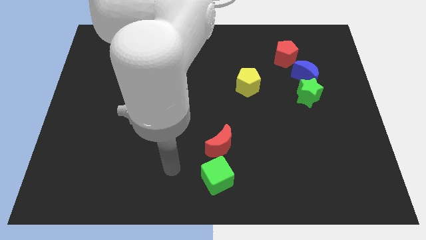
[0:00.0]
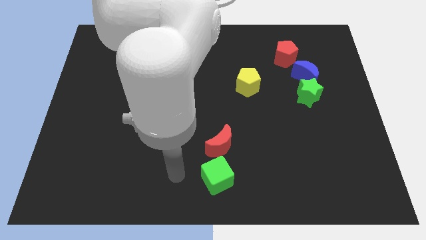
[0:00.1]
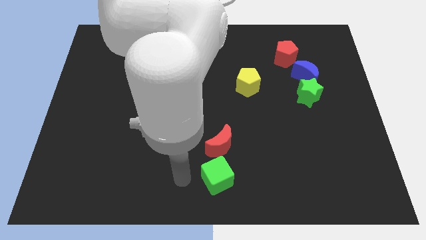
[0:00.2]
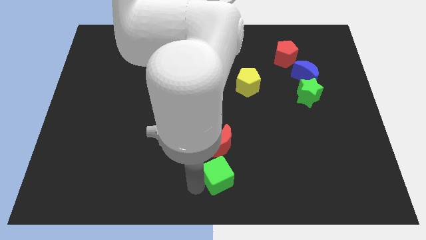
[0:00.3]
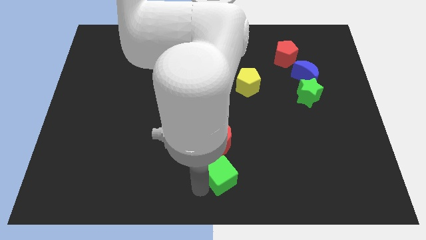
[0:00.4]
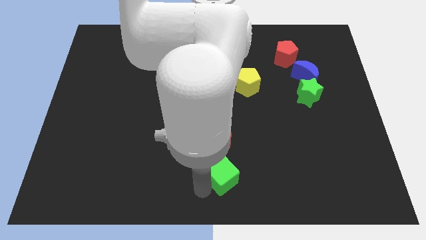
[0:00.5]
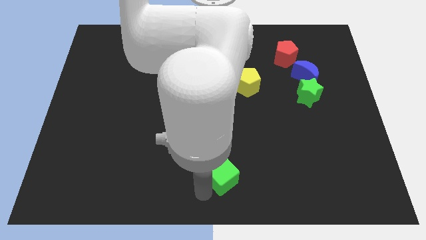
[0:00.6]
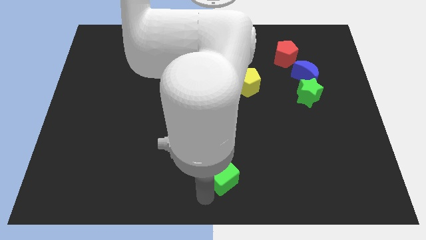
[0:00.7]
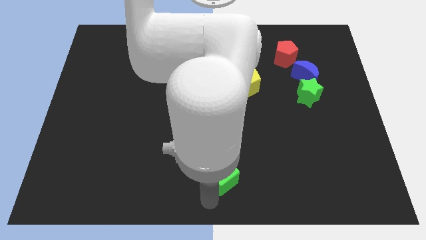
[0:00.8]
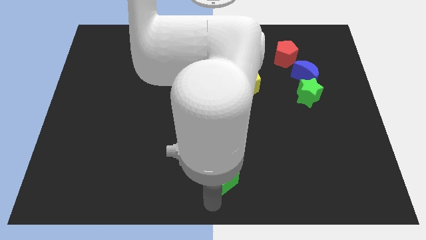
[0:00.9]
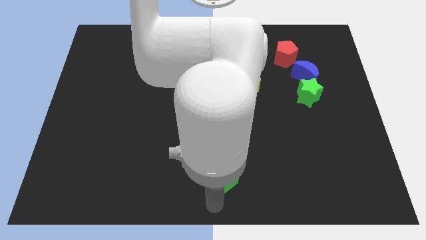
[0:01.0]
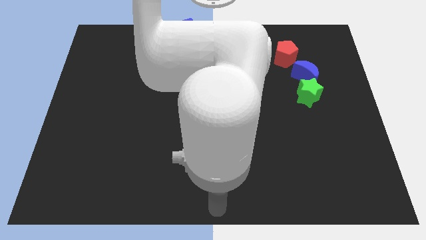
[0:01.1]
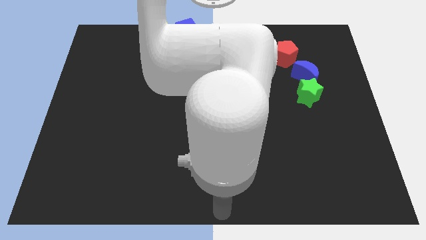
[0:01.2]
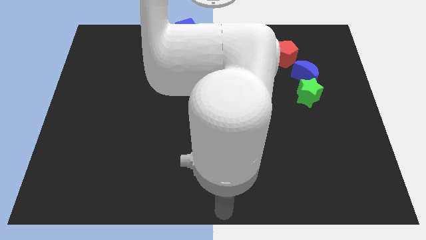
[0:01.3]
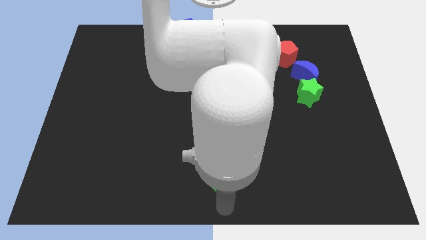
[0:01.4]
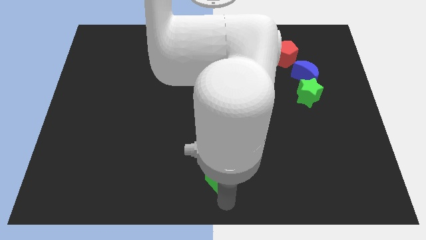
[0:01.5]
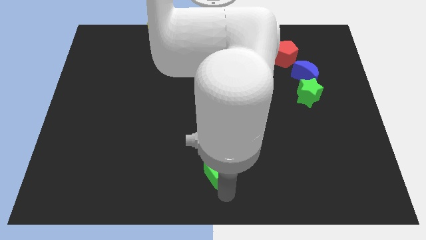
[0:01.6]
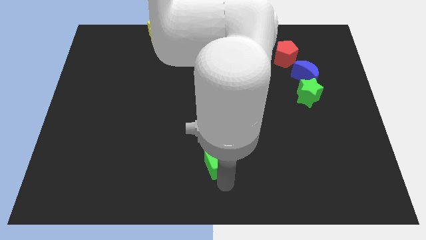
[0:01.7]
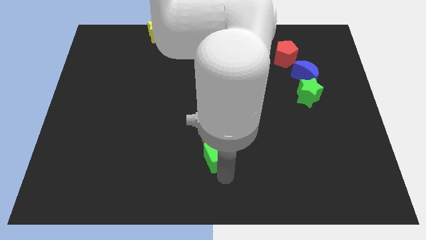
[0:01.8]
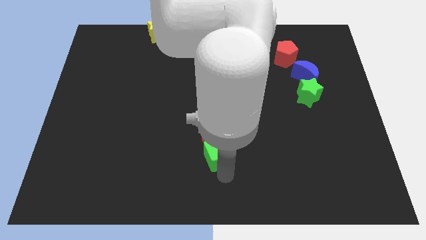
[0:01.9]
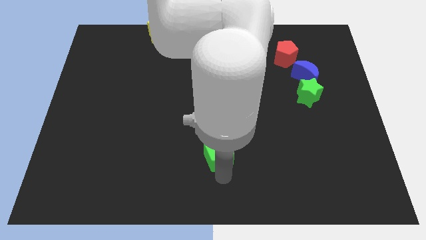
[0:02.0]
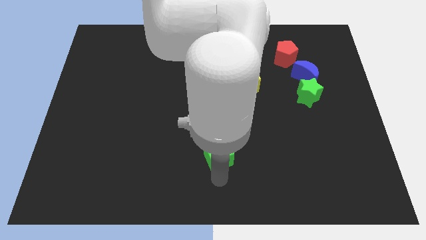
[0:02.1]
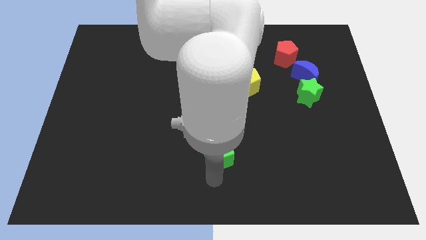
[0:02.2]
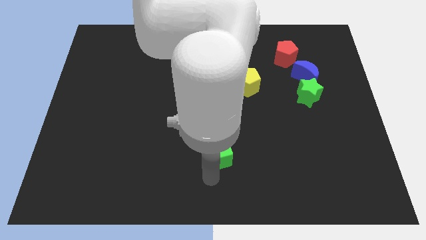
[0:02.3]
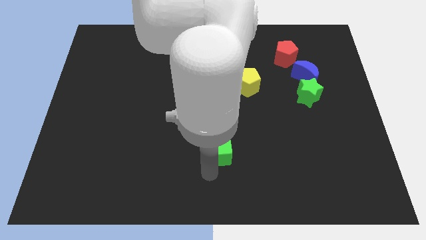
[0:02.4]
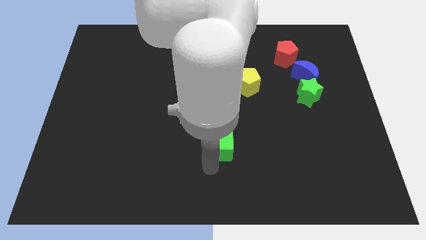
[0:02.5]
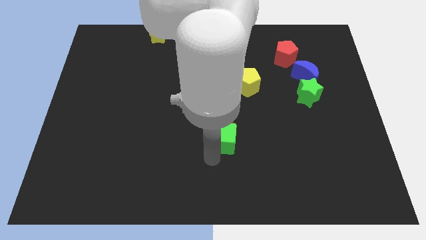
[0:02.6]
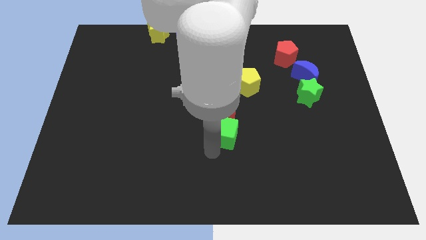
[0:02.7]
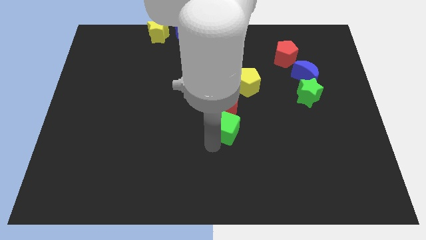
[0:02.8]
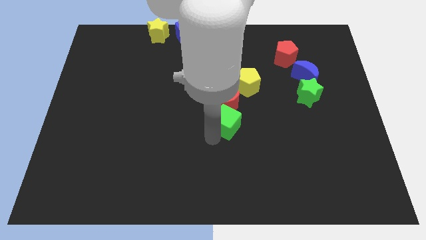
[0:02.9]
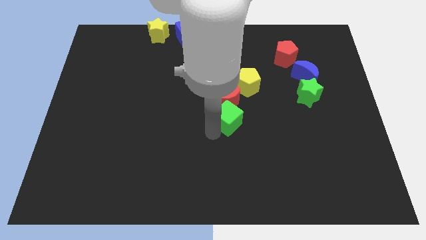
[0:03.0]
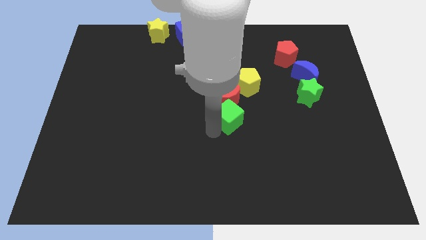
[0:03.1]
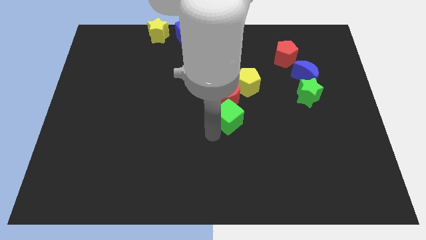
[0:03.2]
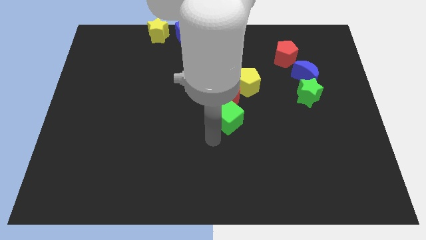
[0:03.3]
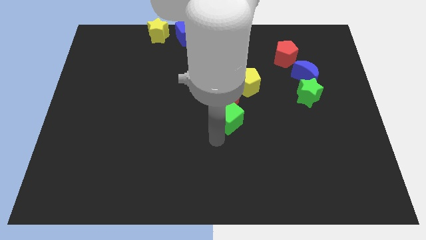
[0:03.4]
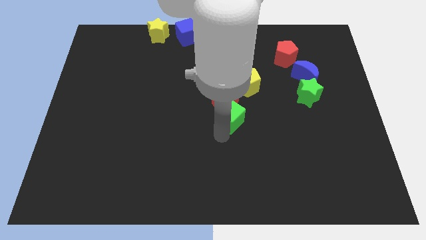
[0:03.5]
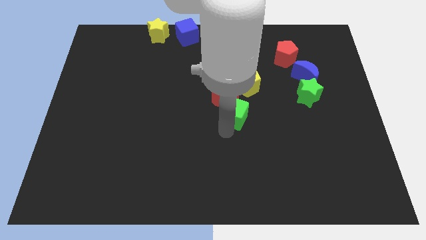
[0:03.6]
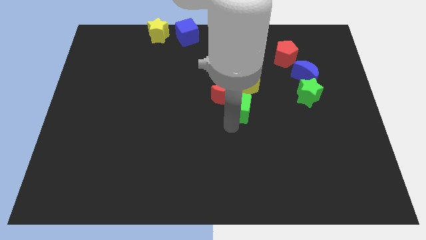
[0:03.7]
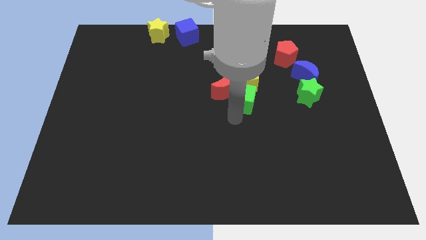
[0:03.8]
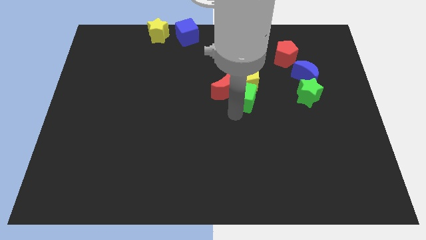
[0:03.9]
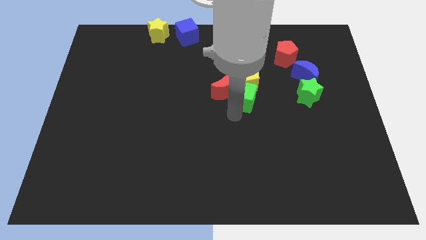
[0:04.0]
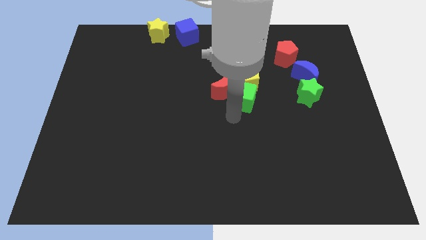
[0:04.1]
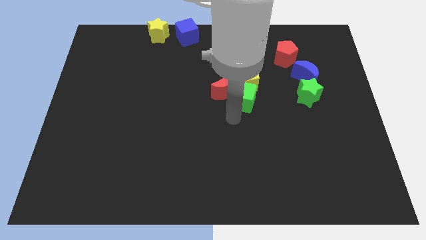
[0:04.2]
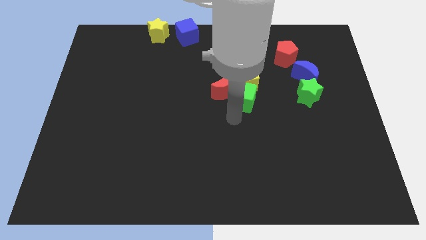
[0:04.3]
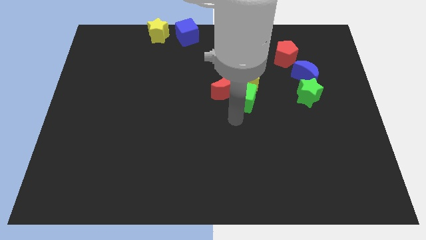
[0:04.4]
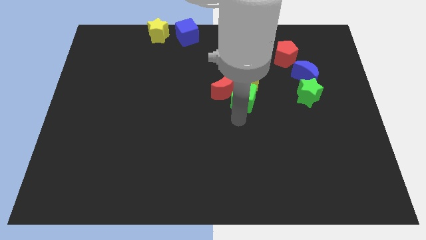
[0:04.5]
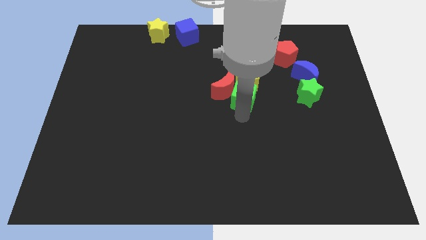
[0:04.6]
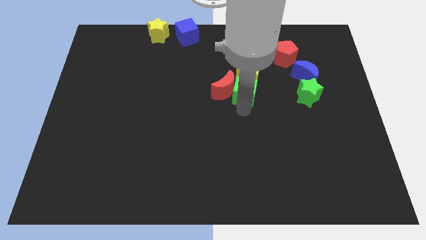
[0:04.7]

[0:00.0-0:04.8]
move the green cube towards the center of the board

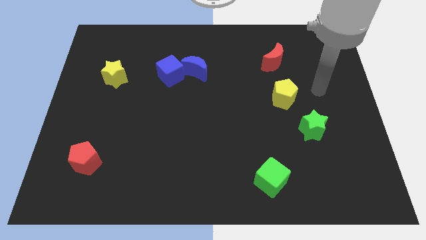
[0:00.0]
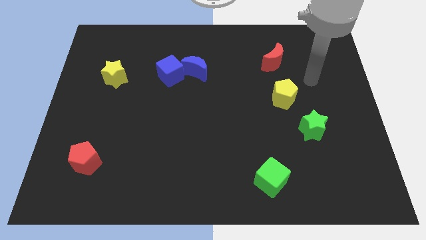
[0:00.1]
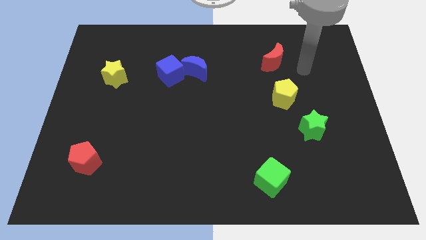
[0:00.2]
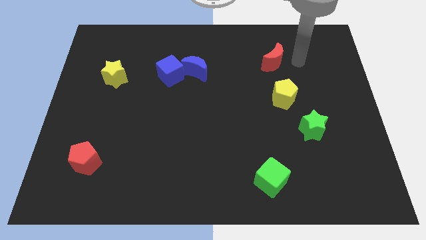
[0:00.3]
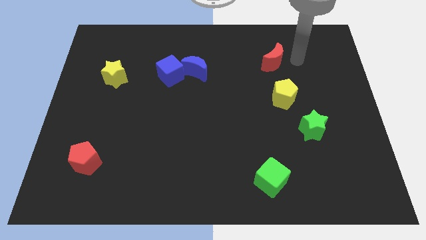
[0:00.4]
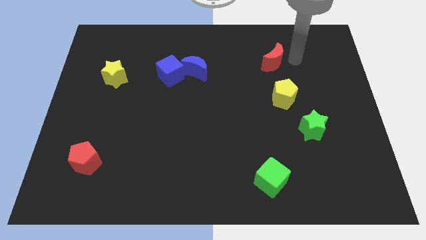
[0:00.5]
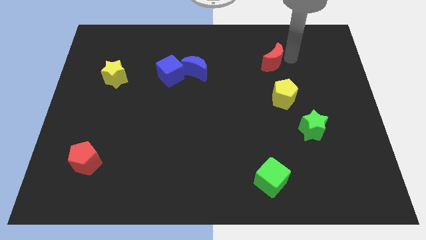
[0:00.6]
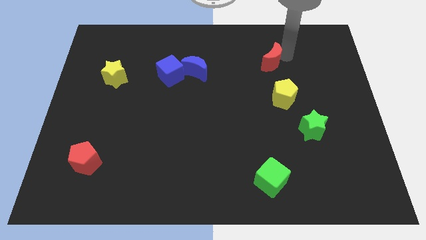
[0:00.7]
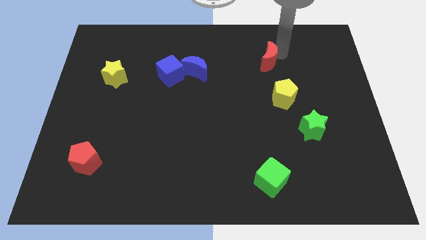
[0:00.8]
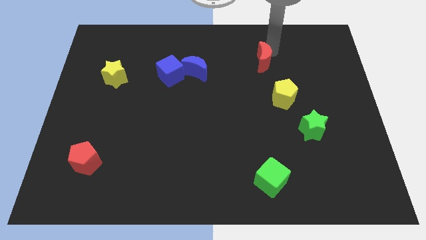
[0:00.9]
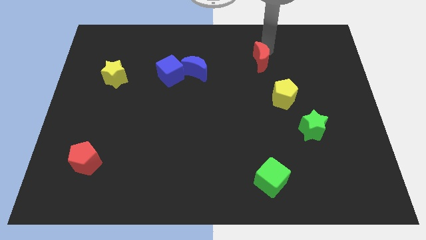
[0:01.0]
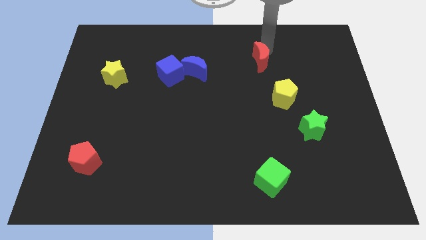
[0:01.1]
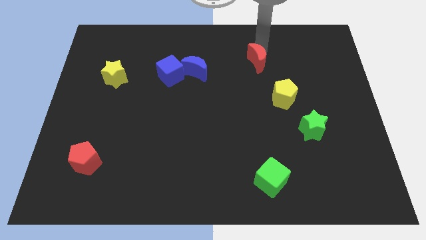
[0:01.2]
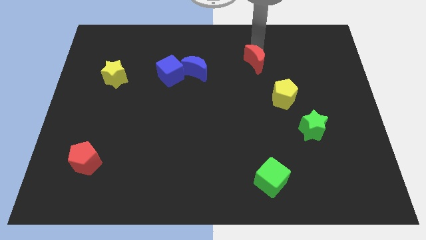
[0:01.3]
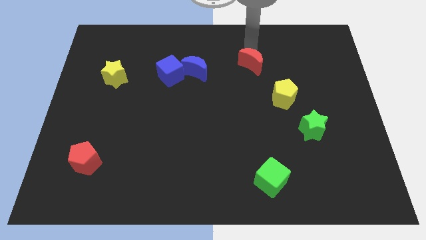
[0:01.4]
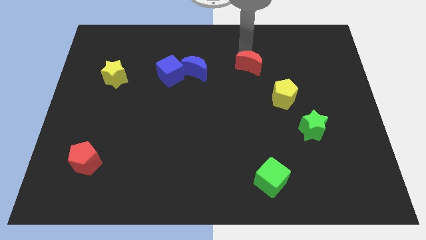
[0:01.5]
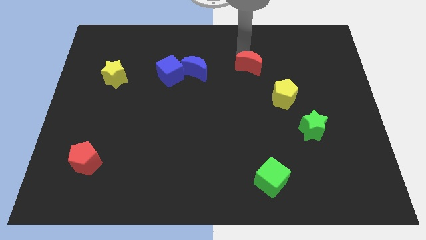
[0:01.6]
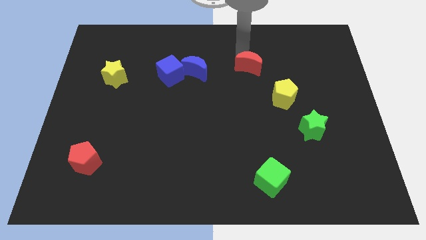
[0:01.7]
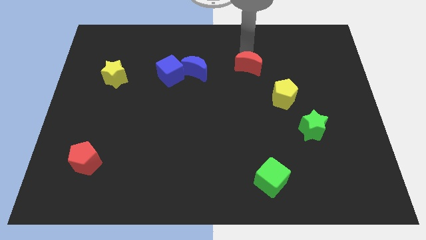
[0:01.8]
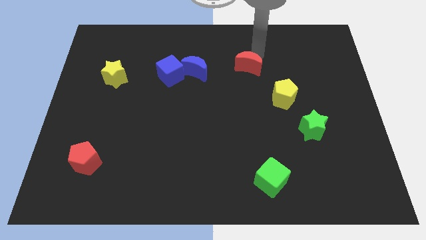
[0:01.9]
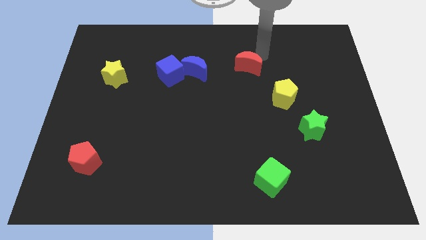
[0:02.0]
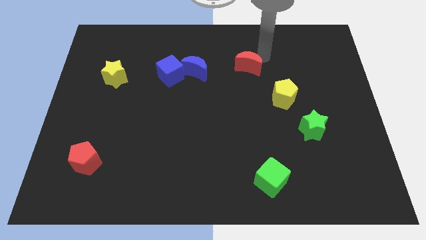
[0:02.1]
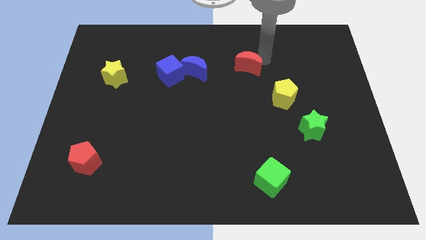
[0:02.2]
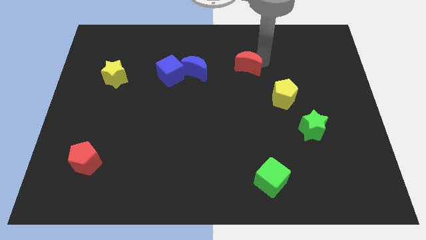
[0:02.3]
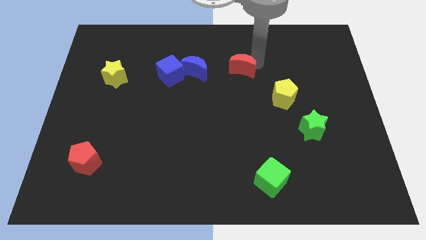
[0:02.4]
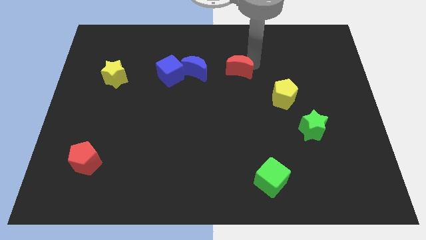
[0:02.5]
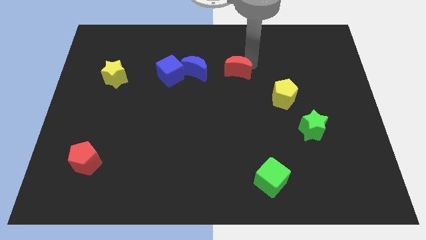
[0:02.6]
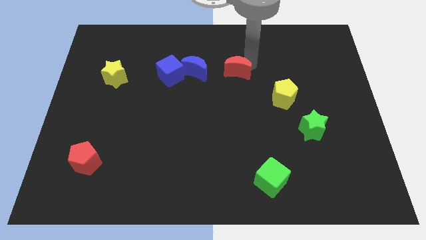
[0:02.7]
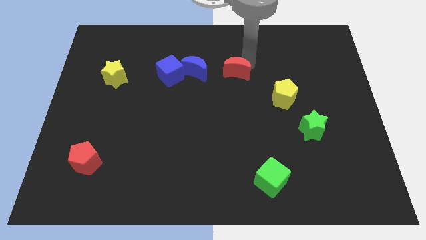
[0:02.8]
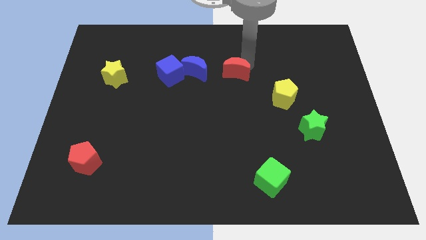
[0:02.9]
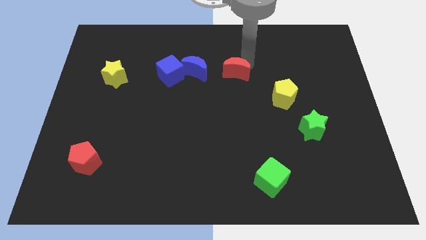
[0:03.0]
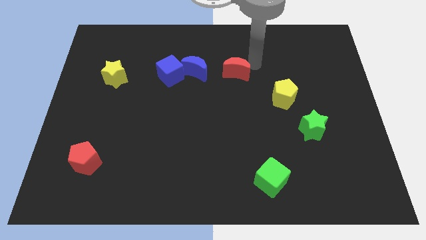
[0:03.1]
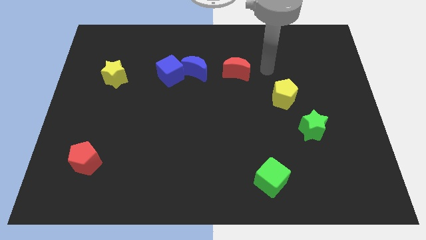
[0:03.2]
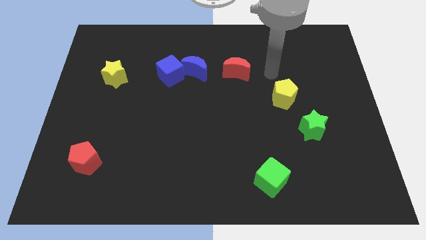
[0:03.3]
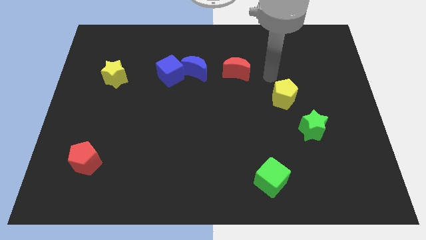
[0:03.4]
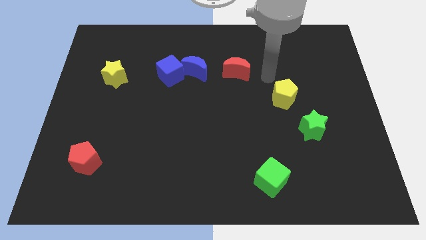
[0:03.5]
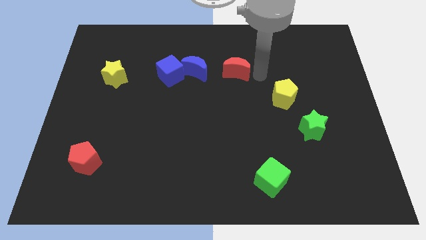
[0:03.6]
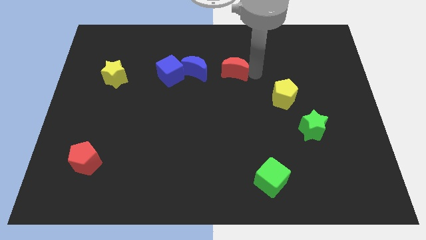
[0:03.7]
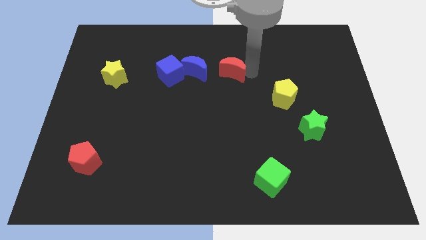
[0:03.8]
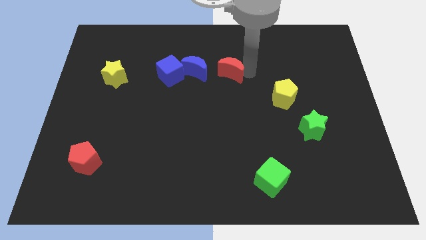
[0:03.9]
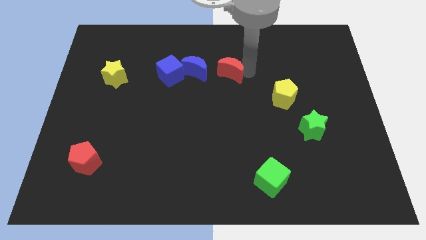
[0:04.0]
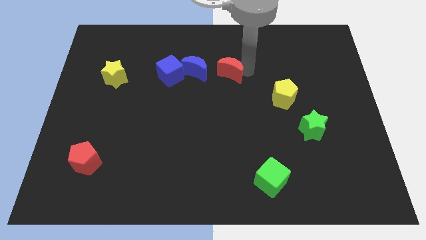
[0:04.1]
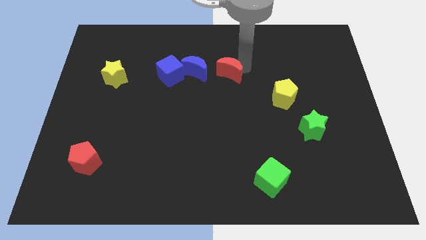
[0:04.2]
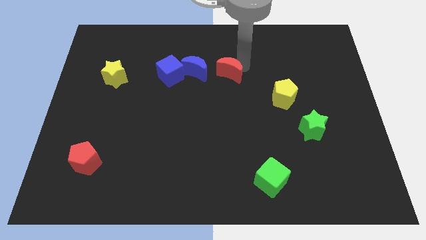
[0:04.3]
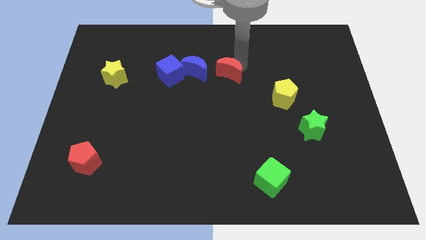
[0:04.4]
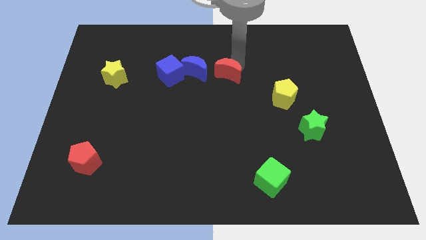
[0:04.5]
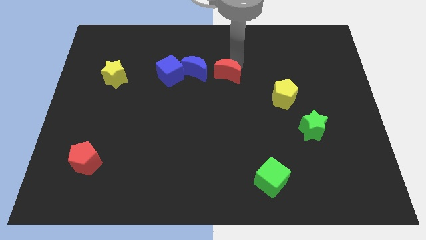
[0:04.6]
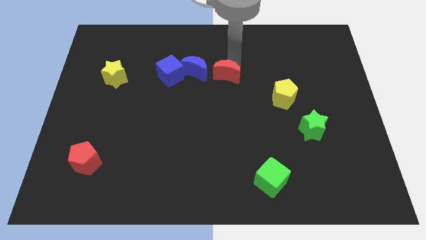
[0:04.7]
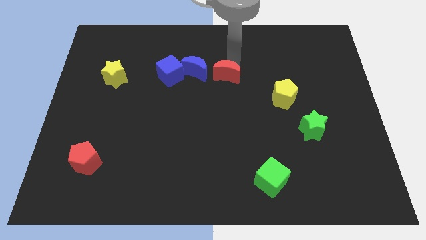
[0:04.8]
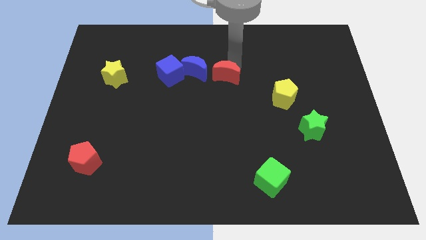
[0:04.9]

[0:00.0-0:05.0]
place the red moon to the right side of blue moon
